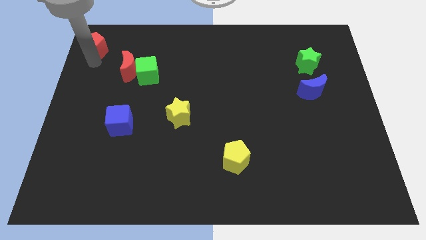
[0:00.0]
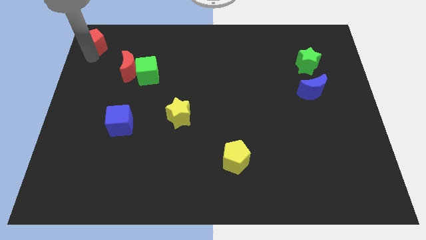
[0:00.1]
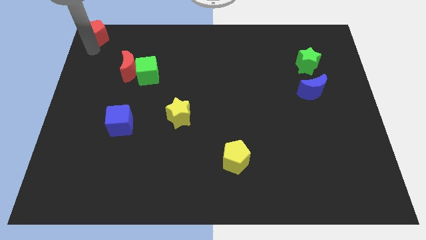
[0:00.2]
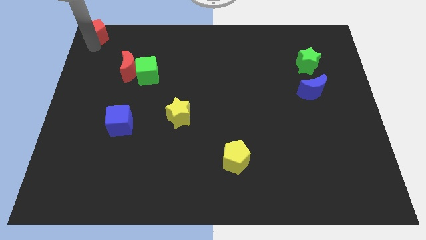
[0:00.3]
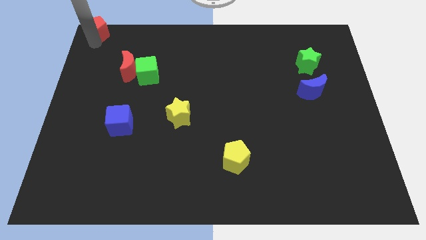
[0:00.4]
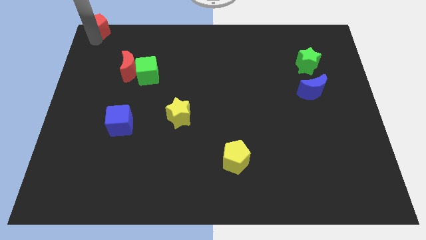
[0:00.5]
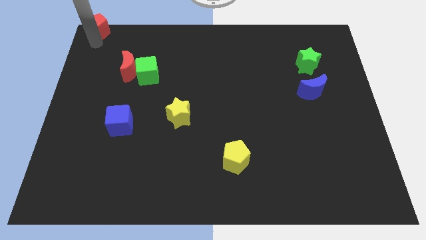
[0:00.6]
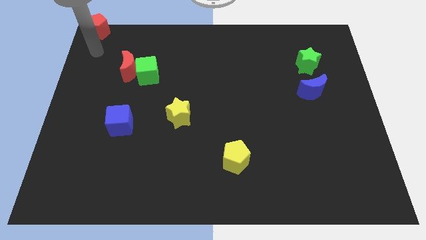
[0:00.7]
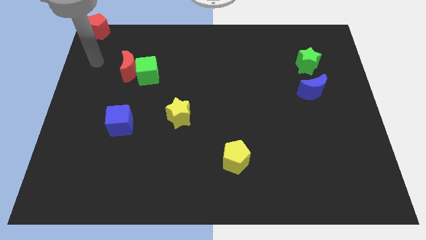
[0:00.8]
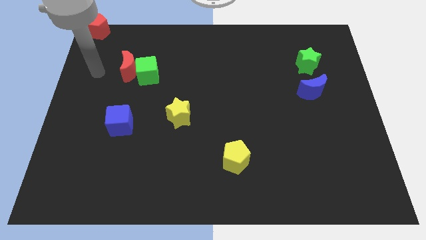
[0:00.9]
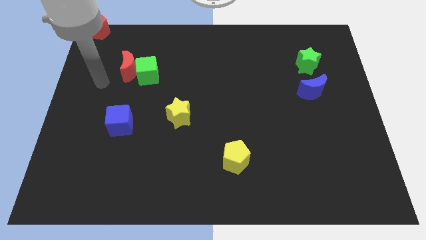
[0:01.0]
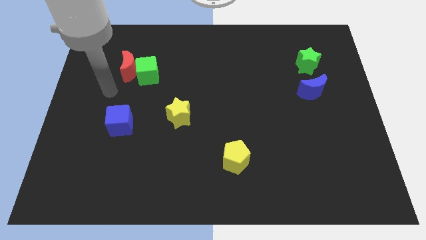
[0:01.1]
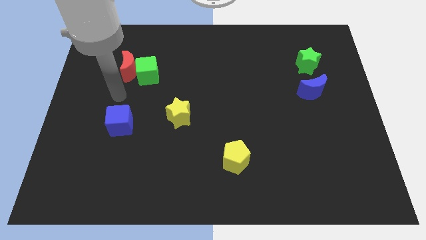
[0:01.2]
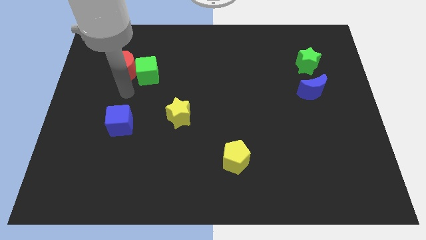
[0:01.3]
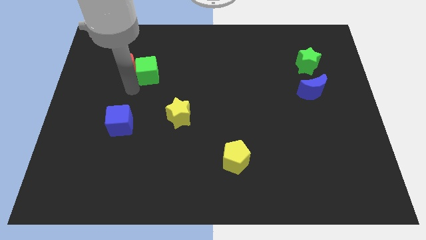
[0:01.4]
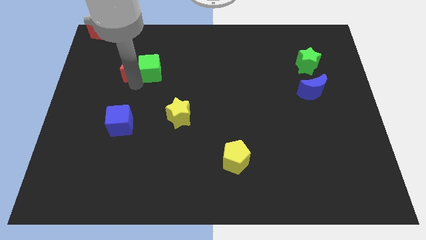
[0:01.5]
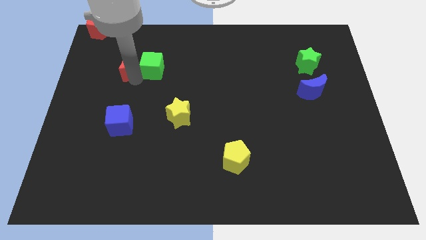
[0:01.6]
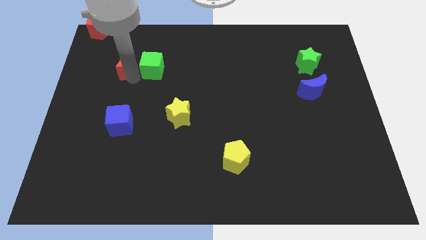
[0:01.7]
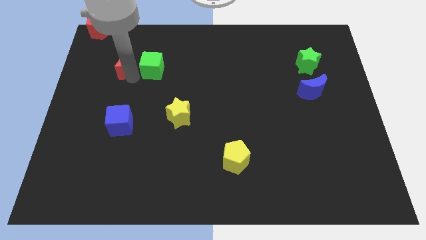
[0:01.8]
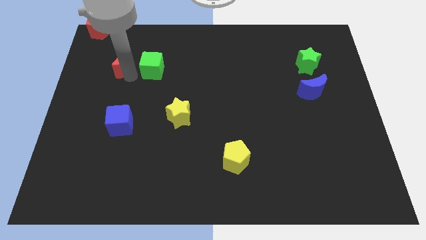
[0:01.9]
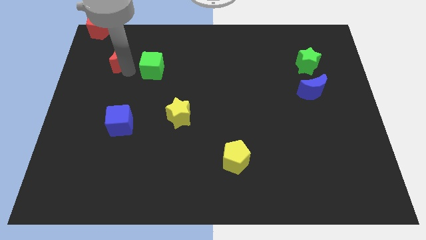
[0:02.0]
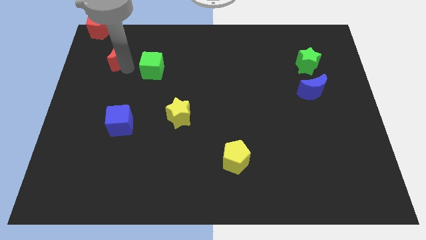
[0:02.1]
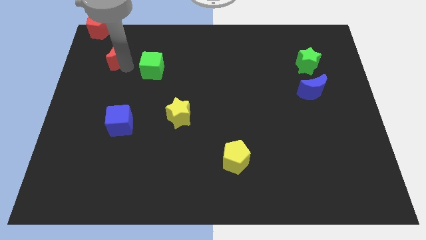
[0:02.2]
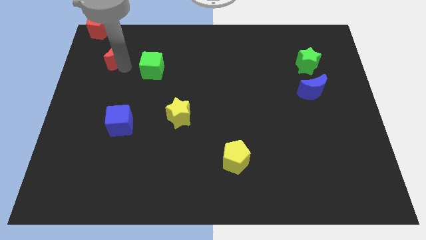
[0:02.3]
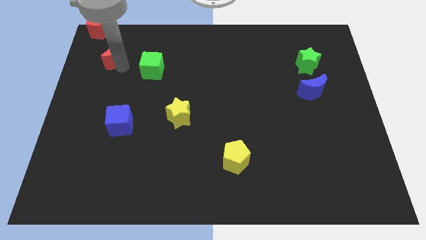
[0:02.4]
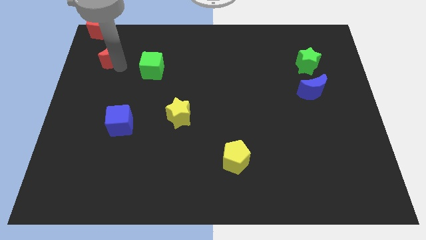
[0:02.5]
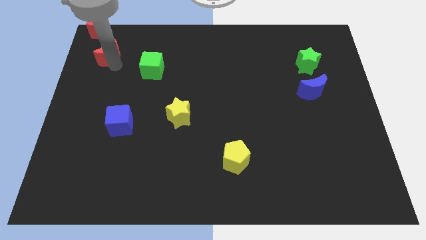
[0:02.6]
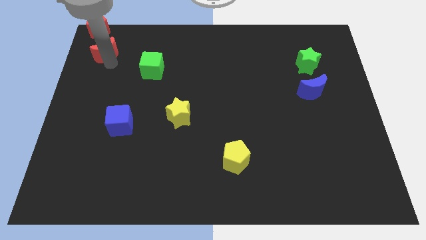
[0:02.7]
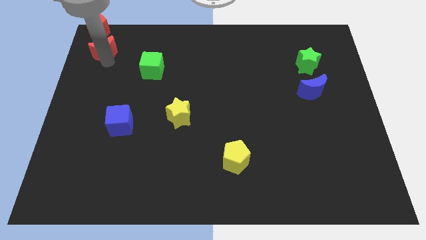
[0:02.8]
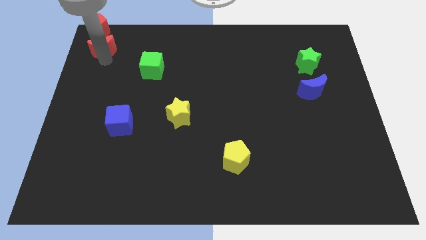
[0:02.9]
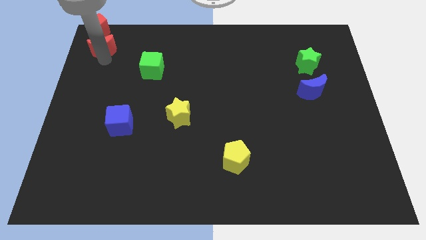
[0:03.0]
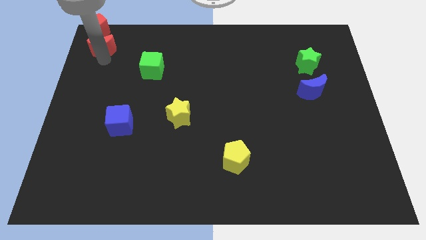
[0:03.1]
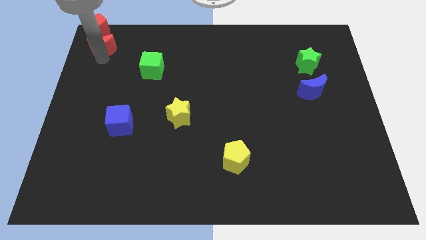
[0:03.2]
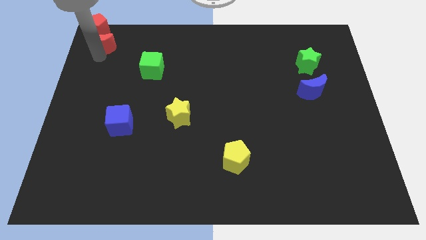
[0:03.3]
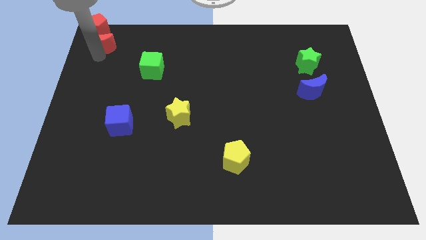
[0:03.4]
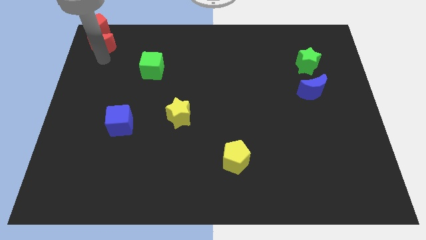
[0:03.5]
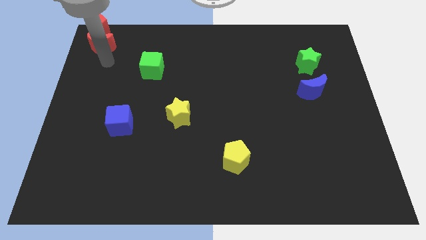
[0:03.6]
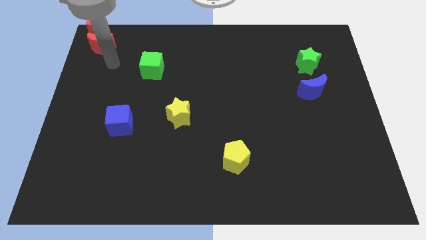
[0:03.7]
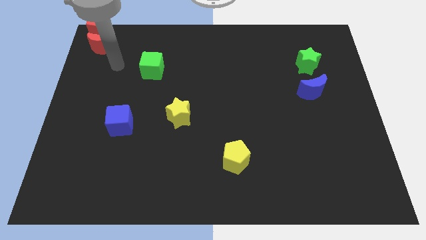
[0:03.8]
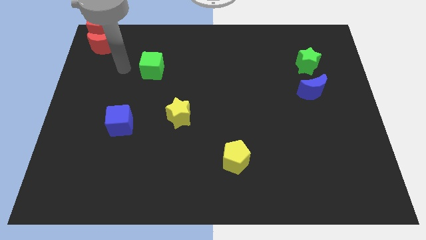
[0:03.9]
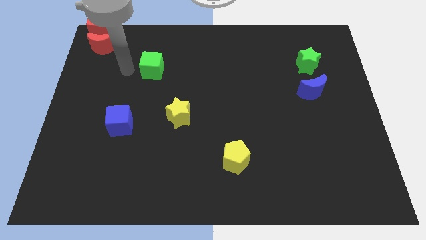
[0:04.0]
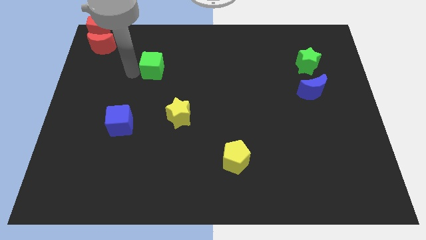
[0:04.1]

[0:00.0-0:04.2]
push red blocks at the top left corner

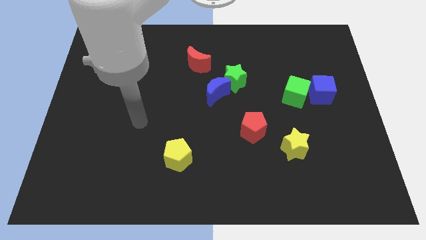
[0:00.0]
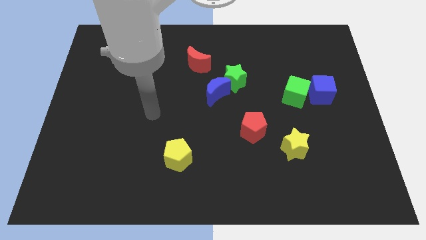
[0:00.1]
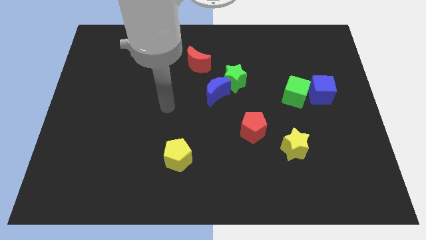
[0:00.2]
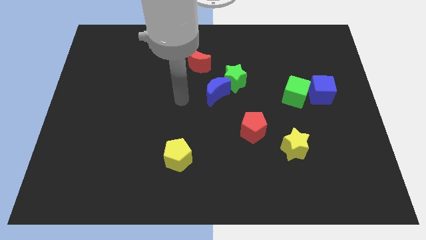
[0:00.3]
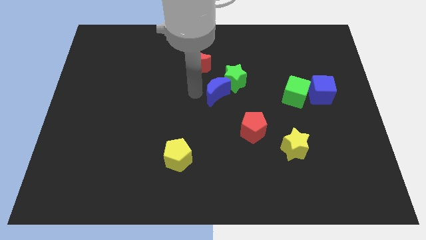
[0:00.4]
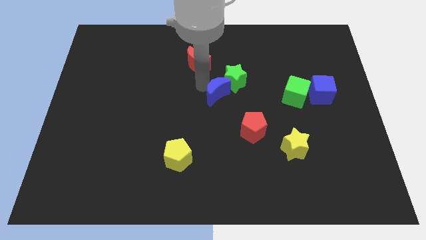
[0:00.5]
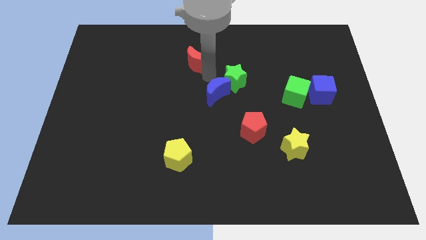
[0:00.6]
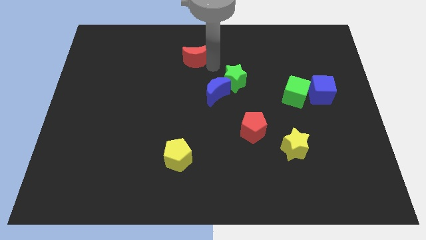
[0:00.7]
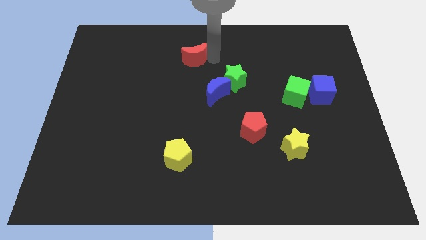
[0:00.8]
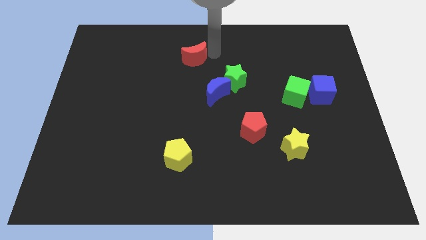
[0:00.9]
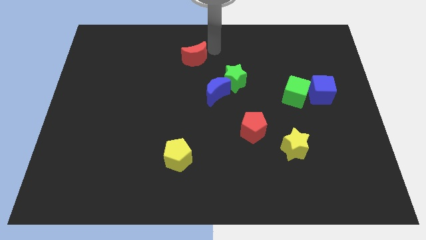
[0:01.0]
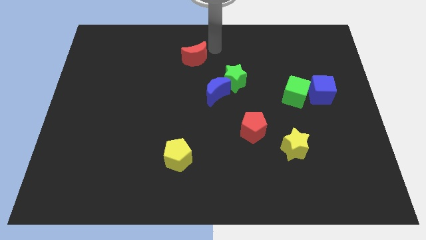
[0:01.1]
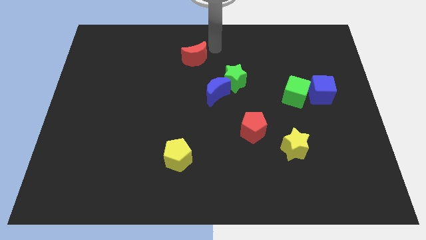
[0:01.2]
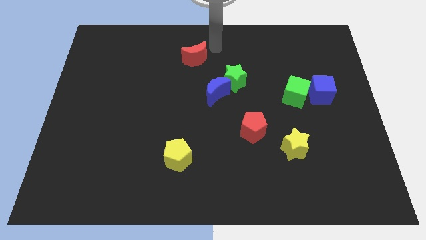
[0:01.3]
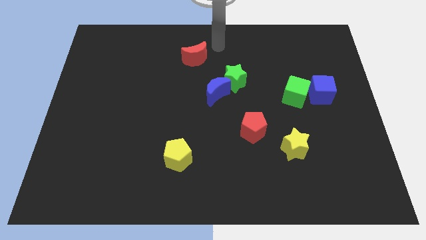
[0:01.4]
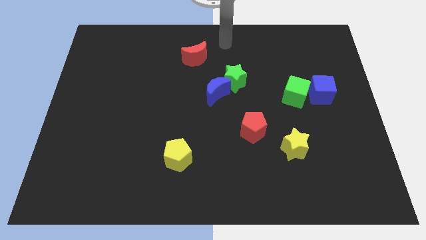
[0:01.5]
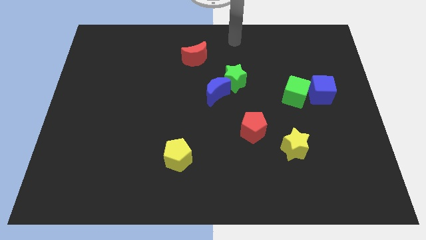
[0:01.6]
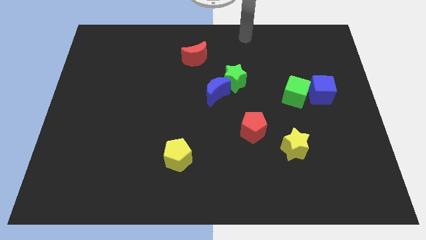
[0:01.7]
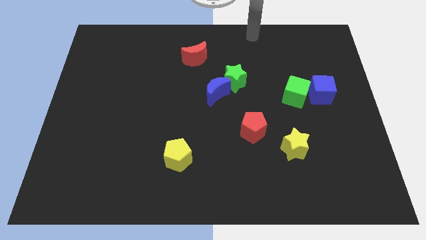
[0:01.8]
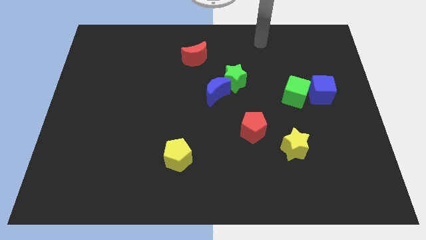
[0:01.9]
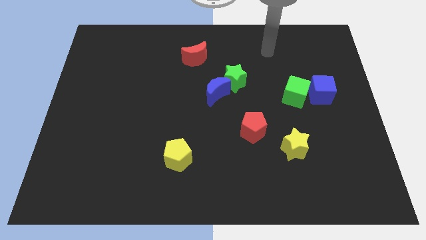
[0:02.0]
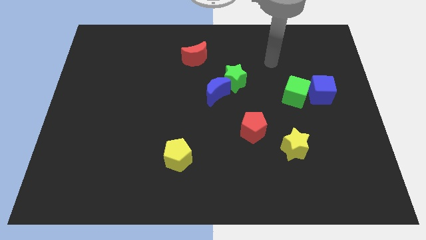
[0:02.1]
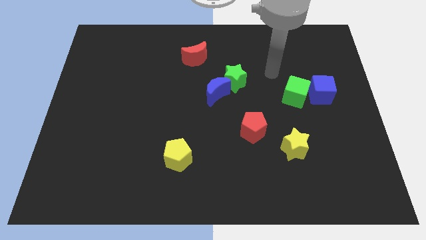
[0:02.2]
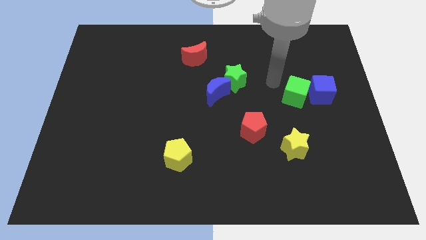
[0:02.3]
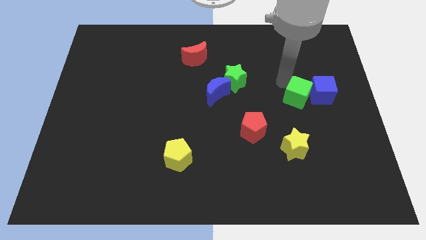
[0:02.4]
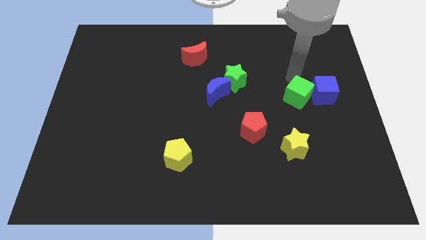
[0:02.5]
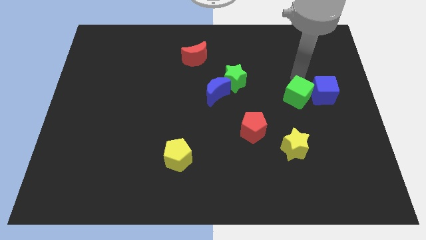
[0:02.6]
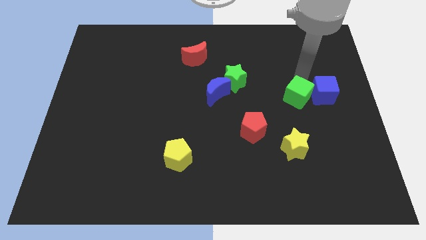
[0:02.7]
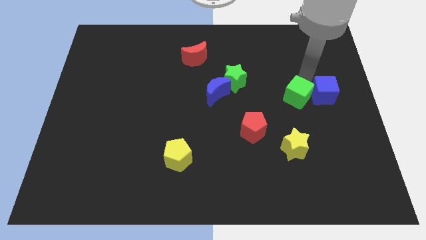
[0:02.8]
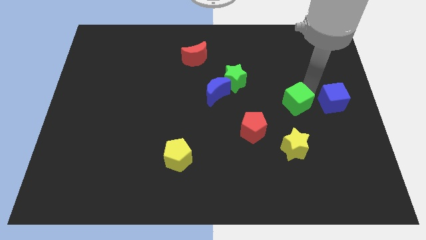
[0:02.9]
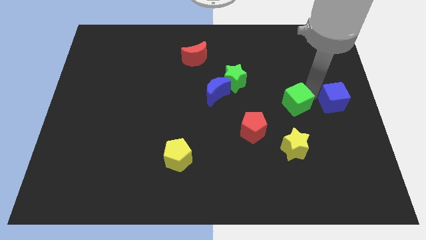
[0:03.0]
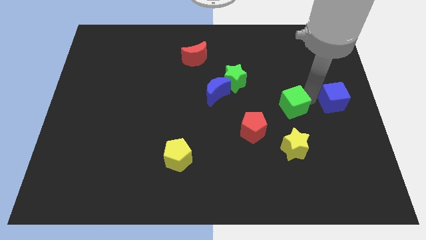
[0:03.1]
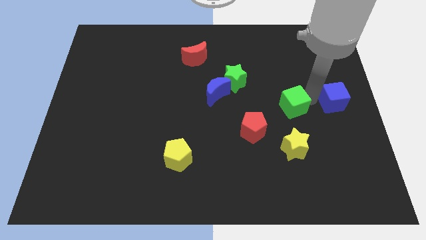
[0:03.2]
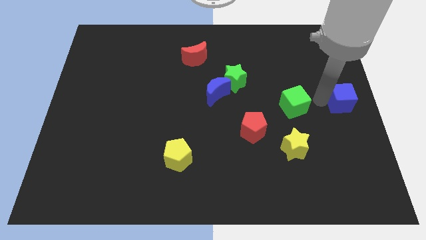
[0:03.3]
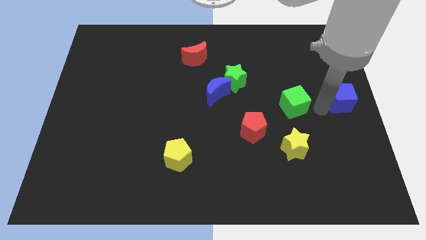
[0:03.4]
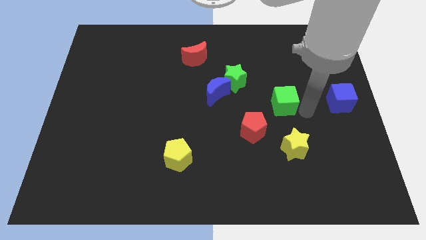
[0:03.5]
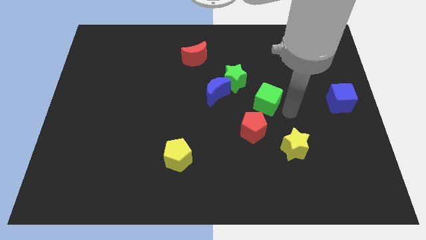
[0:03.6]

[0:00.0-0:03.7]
separate the green cube from the blue cube

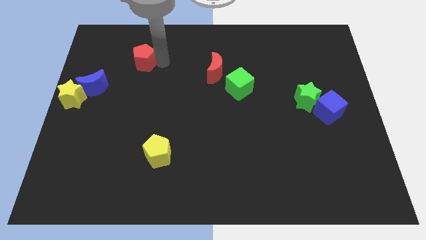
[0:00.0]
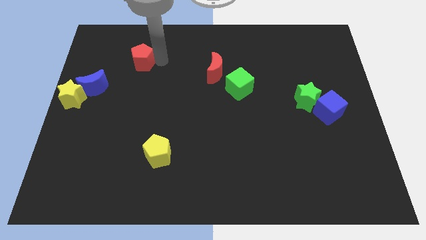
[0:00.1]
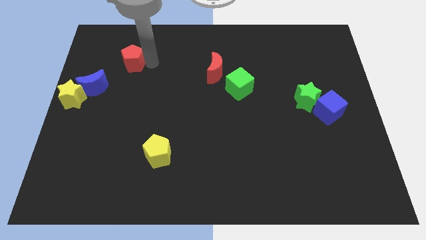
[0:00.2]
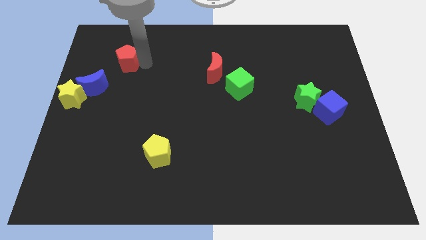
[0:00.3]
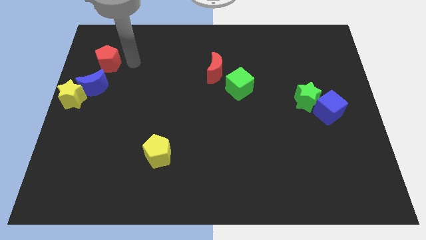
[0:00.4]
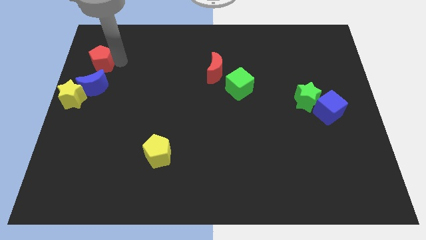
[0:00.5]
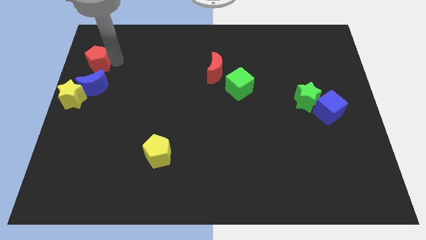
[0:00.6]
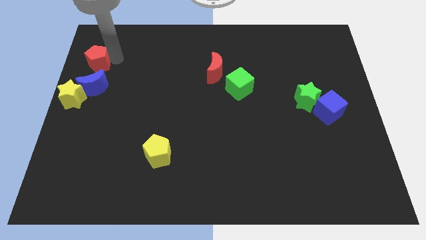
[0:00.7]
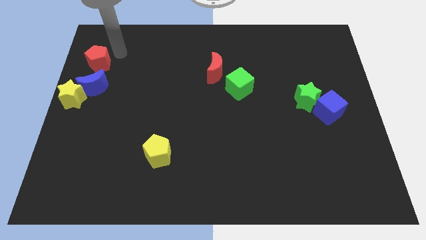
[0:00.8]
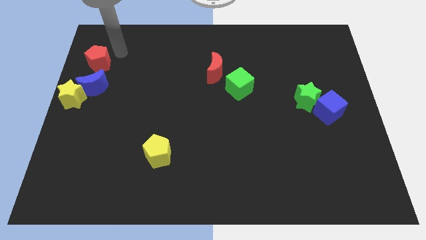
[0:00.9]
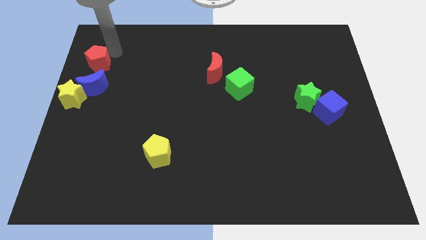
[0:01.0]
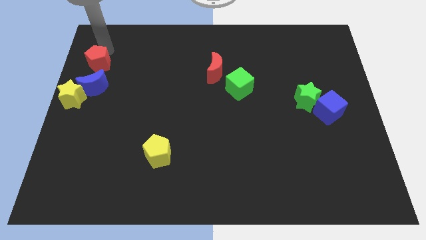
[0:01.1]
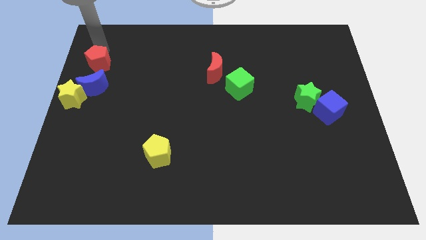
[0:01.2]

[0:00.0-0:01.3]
push the red pentagon diagonally top left to the yellow pentagon
